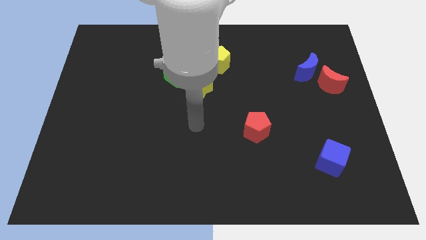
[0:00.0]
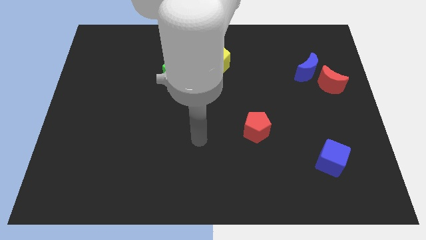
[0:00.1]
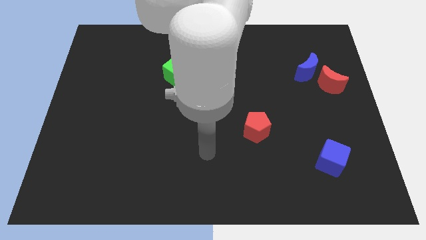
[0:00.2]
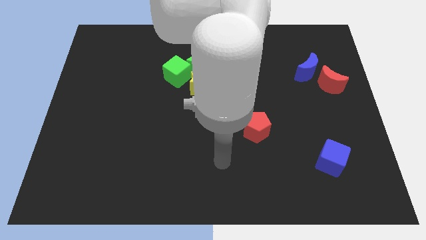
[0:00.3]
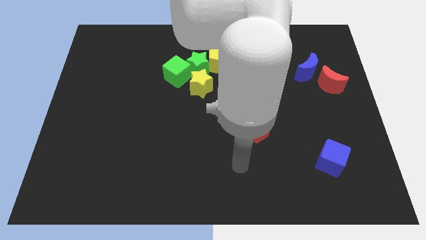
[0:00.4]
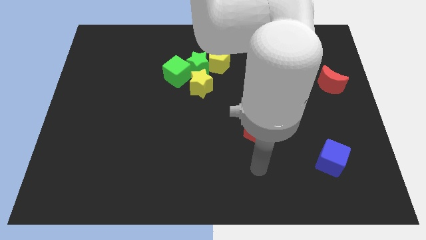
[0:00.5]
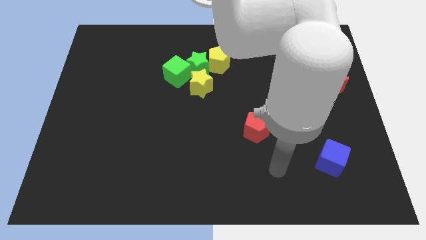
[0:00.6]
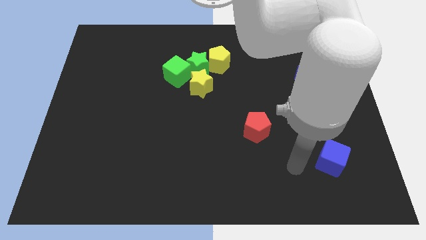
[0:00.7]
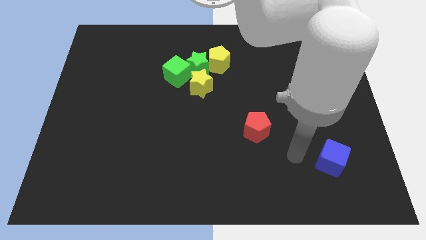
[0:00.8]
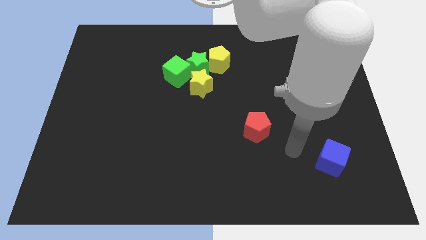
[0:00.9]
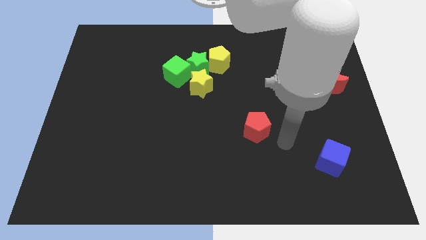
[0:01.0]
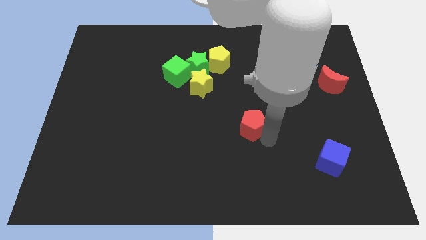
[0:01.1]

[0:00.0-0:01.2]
move your arm bottom right to the red pentagon

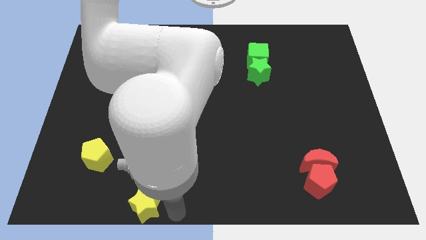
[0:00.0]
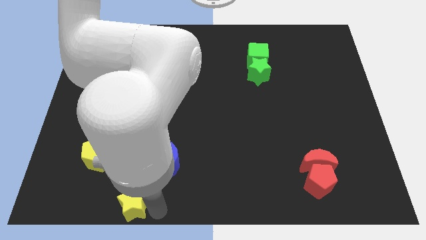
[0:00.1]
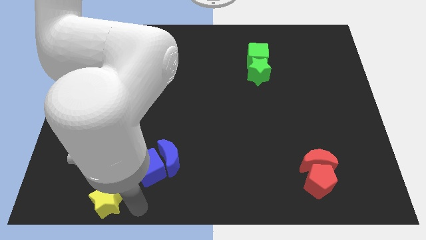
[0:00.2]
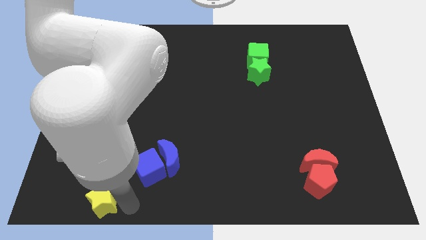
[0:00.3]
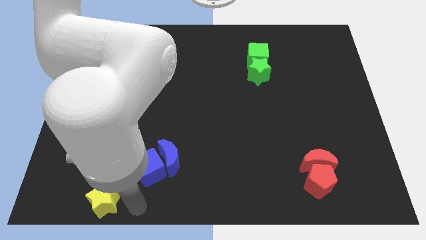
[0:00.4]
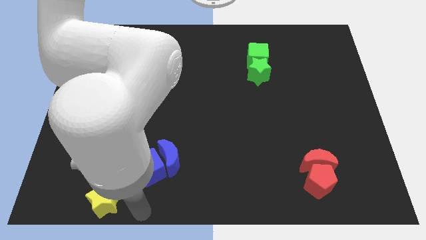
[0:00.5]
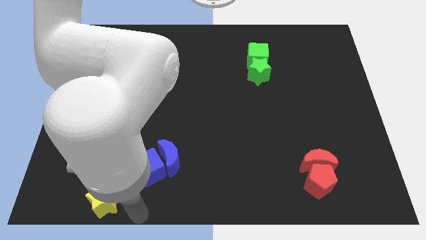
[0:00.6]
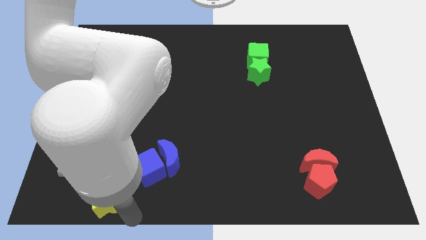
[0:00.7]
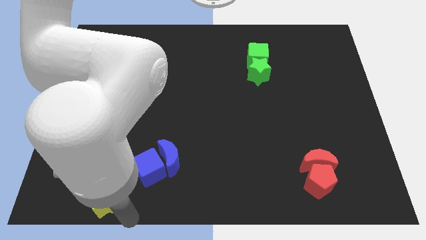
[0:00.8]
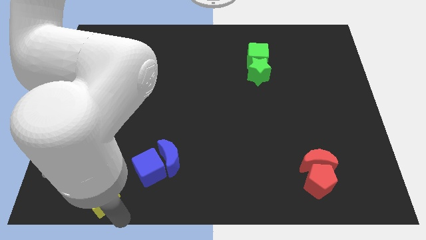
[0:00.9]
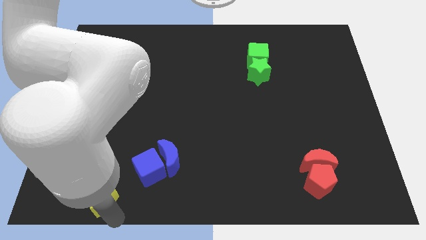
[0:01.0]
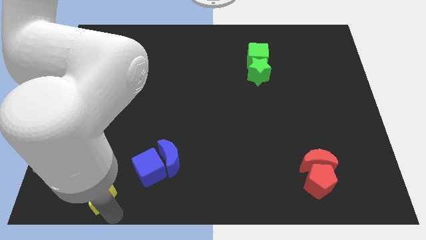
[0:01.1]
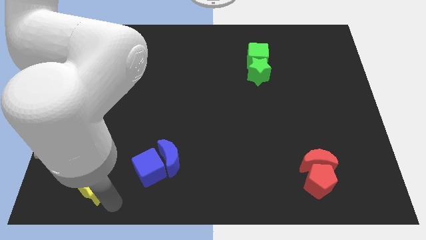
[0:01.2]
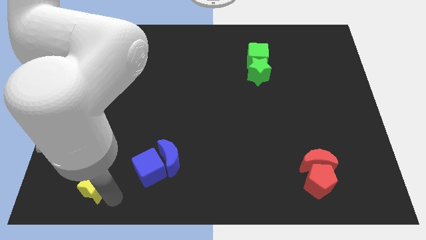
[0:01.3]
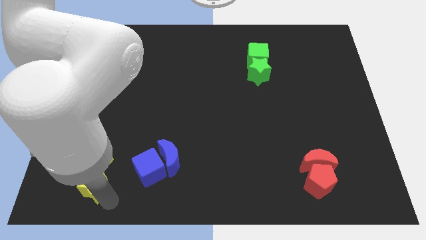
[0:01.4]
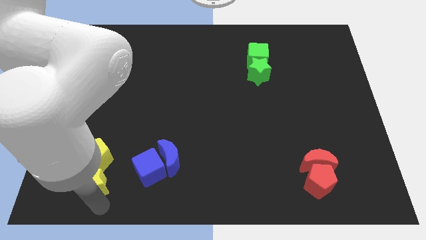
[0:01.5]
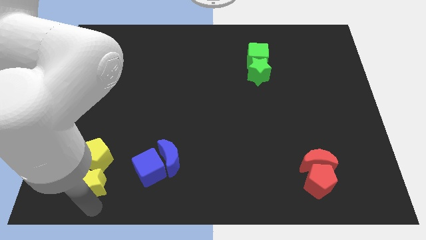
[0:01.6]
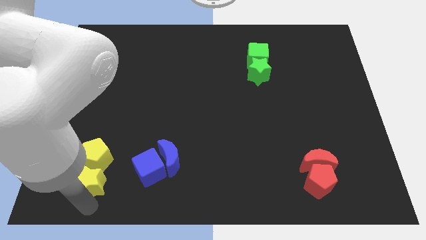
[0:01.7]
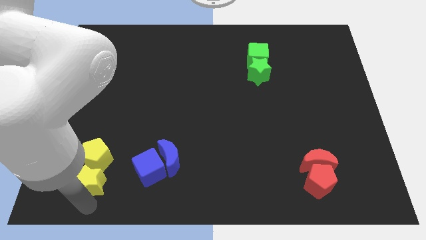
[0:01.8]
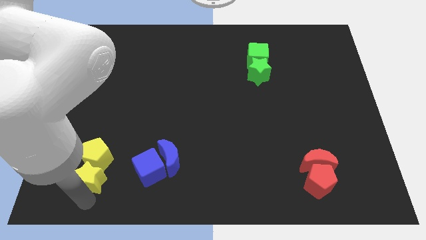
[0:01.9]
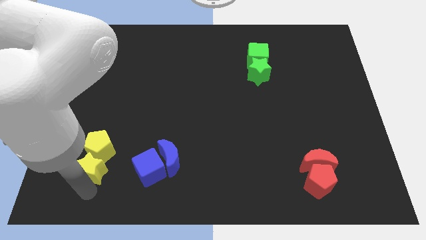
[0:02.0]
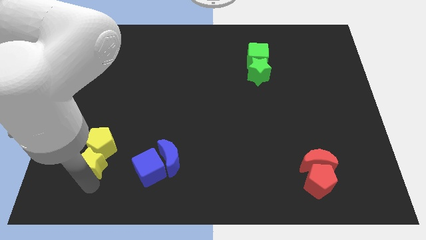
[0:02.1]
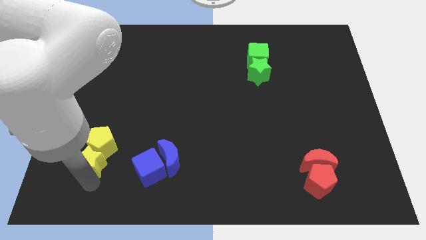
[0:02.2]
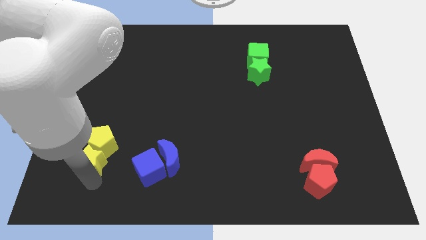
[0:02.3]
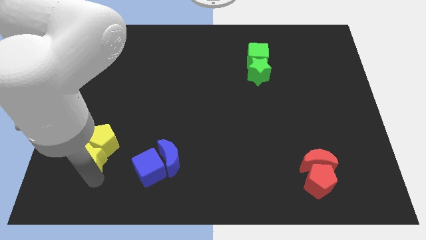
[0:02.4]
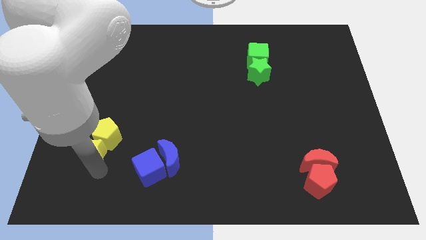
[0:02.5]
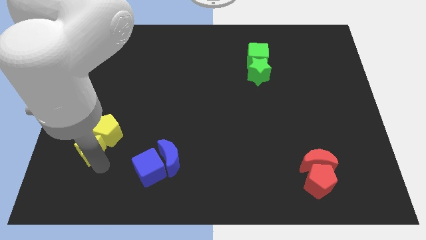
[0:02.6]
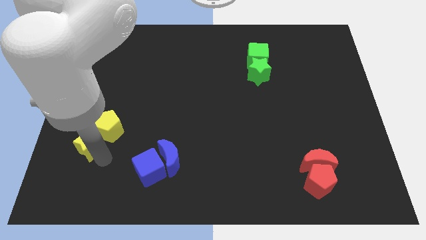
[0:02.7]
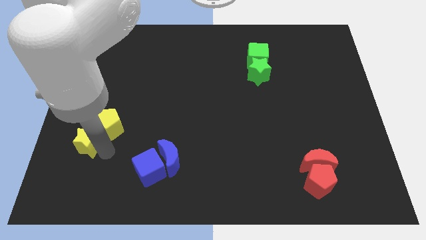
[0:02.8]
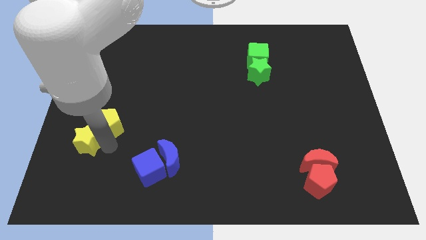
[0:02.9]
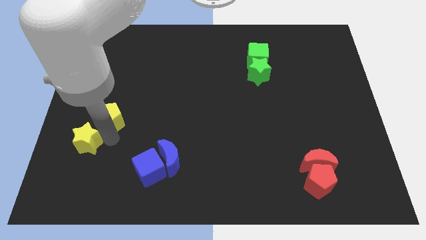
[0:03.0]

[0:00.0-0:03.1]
push yellow star into the yellow pentagon

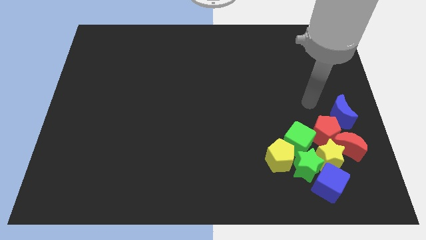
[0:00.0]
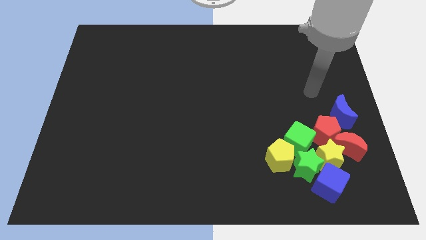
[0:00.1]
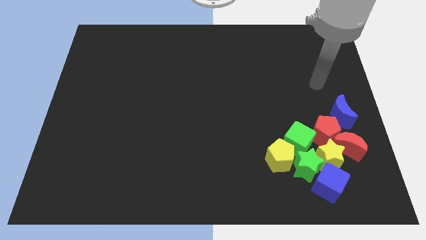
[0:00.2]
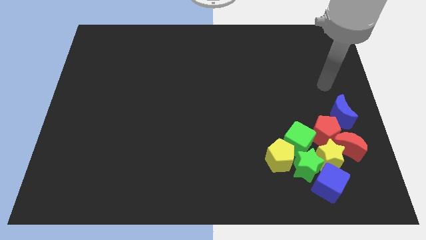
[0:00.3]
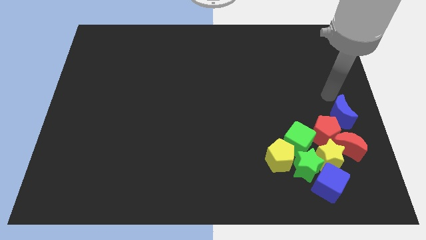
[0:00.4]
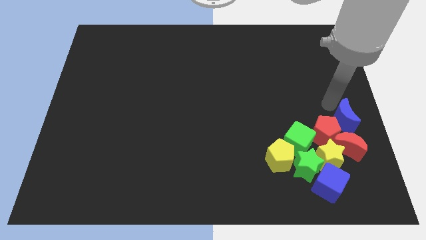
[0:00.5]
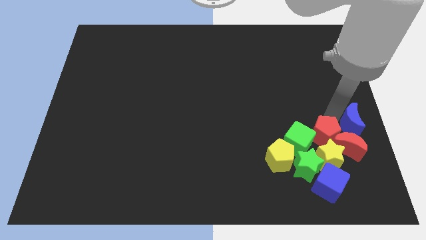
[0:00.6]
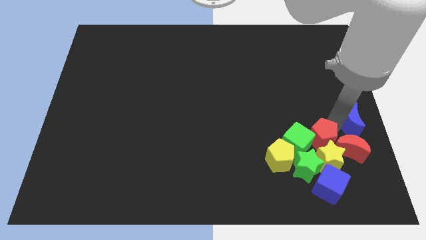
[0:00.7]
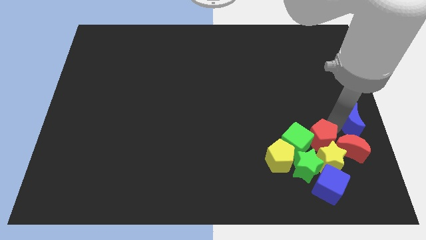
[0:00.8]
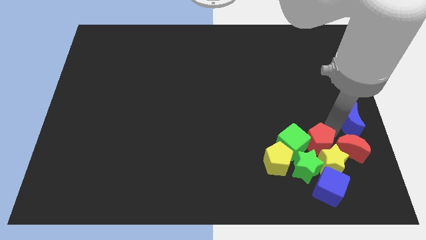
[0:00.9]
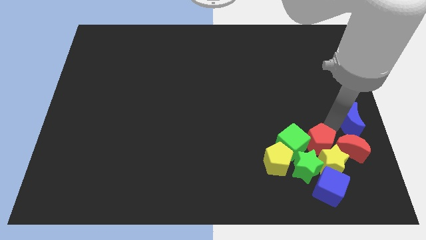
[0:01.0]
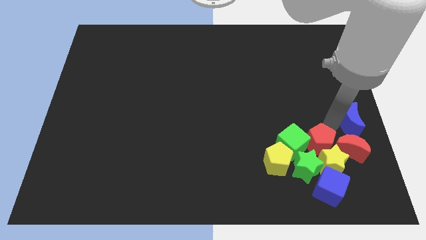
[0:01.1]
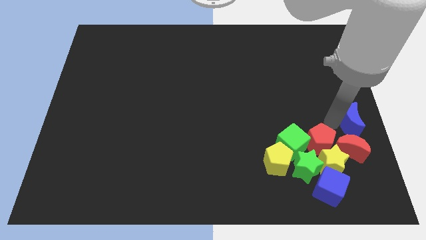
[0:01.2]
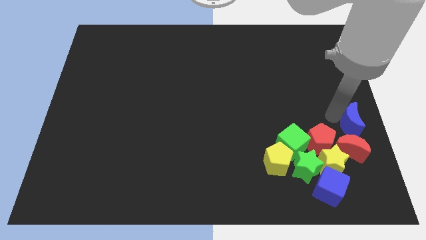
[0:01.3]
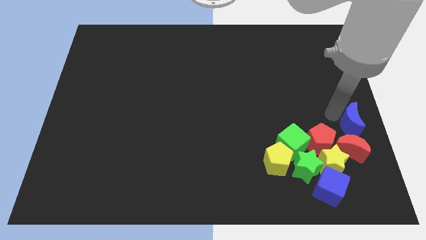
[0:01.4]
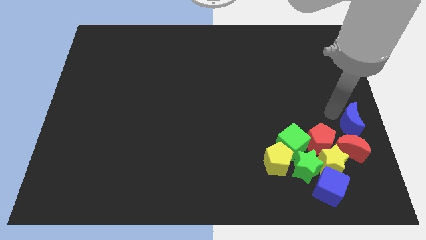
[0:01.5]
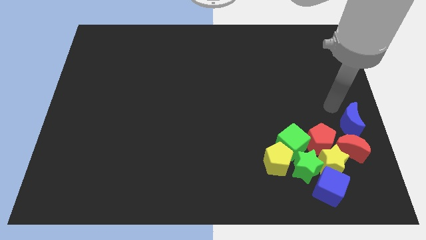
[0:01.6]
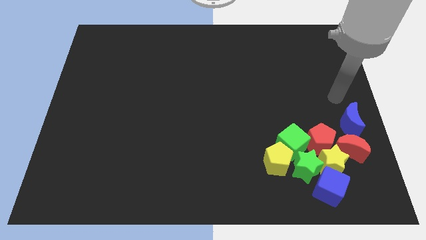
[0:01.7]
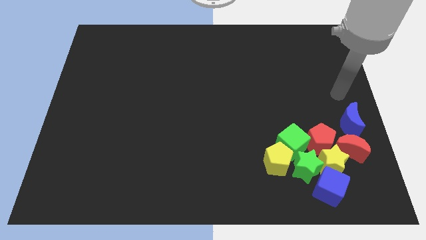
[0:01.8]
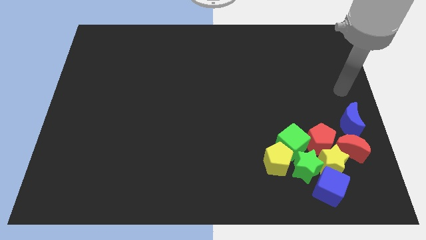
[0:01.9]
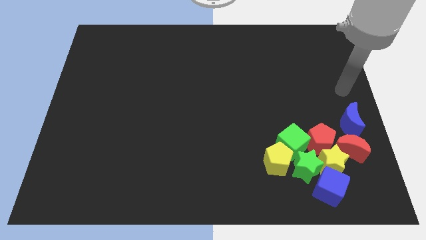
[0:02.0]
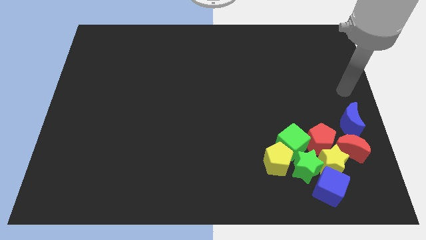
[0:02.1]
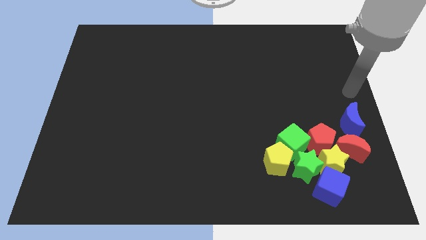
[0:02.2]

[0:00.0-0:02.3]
push the red pentagon into the stars and green cube

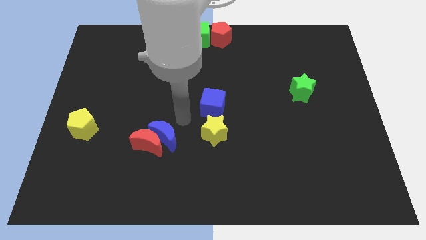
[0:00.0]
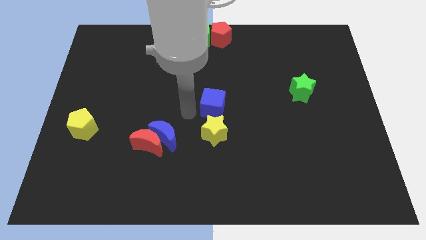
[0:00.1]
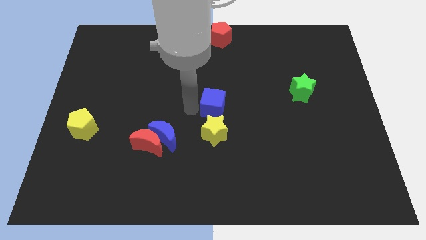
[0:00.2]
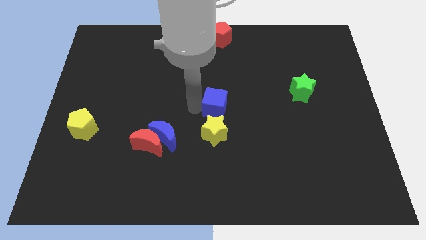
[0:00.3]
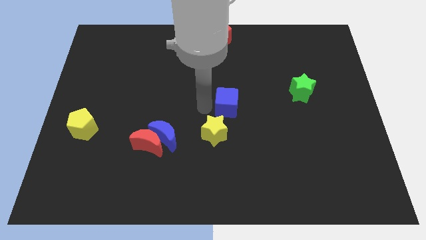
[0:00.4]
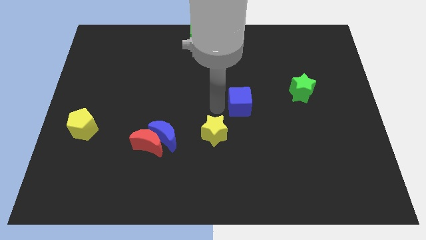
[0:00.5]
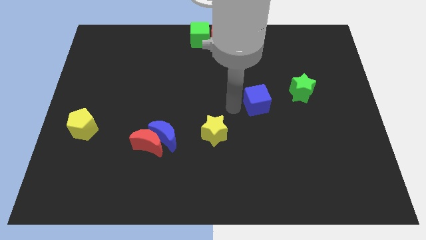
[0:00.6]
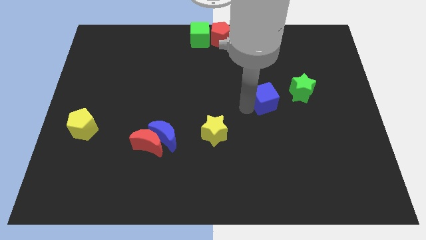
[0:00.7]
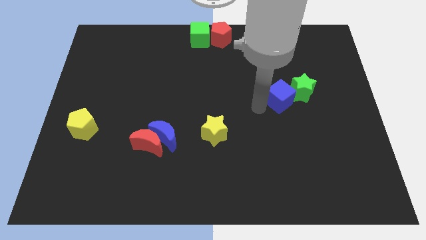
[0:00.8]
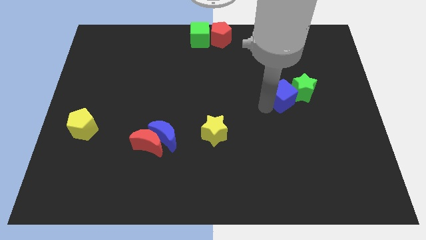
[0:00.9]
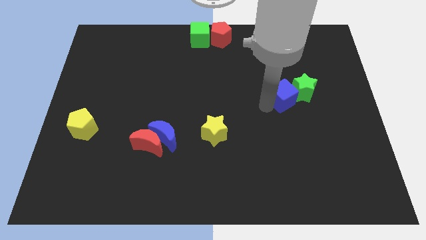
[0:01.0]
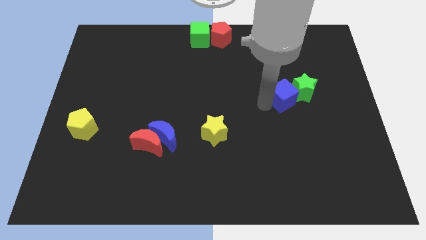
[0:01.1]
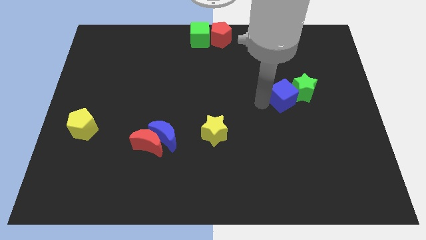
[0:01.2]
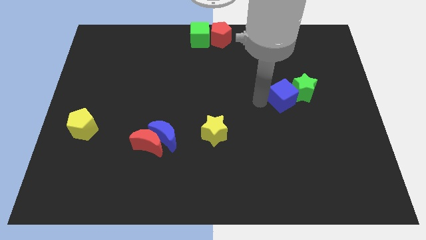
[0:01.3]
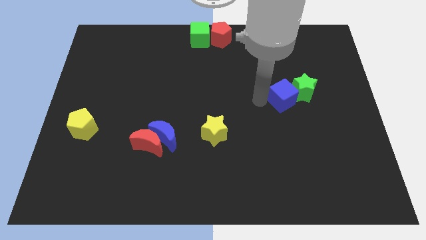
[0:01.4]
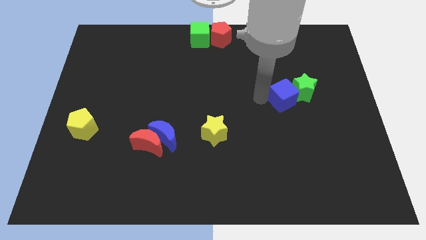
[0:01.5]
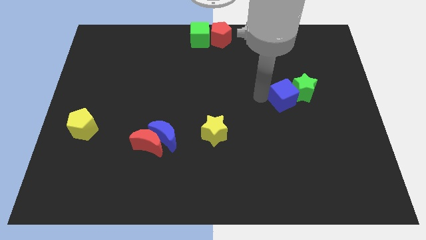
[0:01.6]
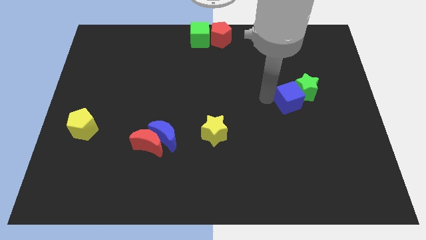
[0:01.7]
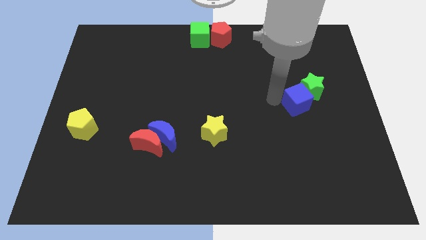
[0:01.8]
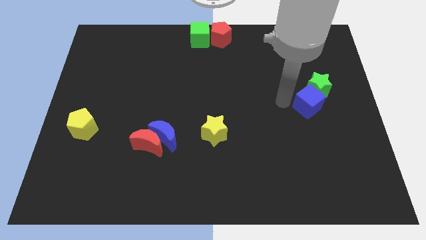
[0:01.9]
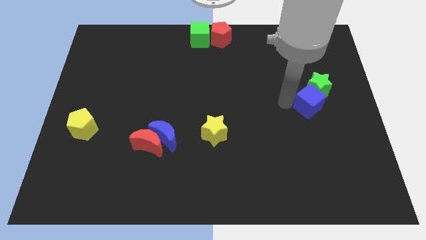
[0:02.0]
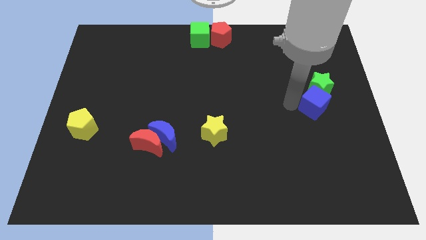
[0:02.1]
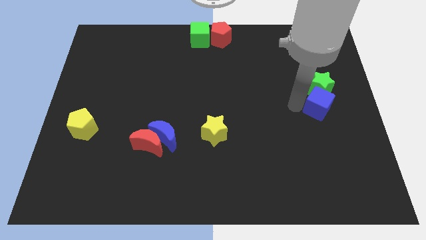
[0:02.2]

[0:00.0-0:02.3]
push the blue cube into the green star
